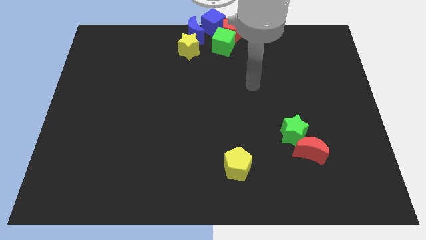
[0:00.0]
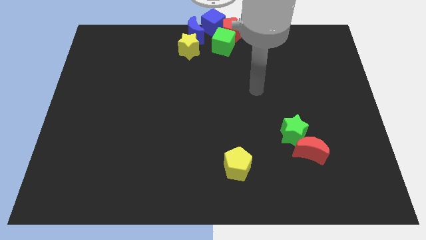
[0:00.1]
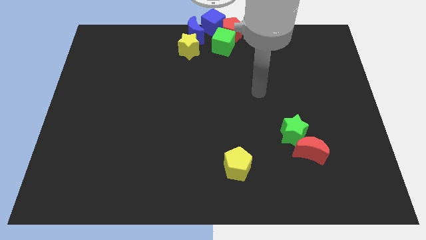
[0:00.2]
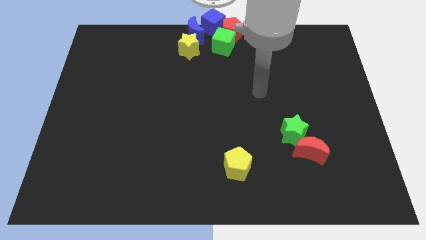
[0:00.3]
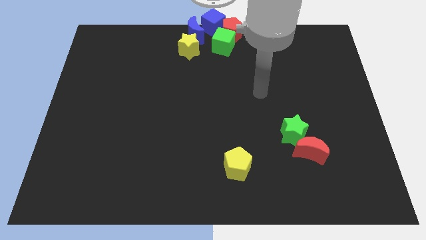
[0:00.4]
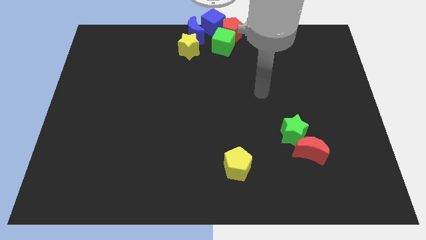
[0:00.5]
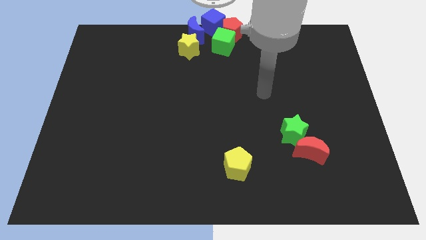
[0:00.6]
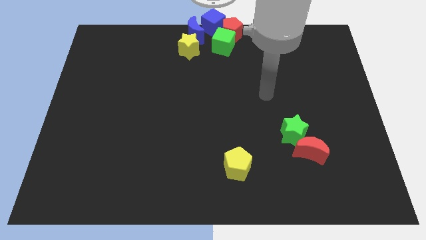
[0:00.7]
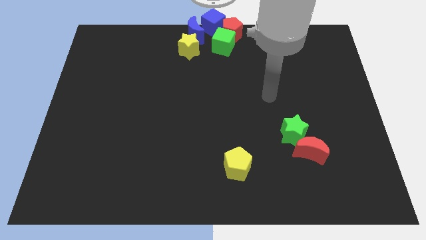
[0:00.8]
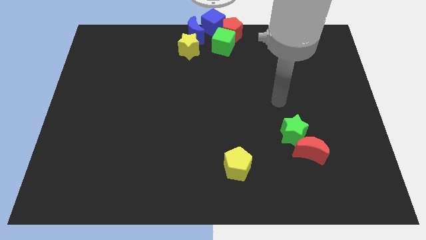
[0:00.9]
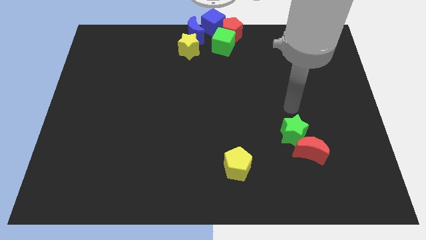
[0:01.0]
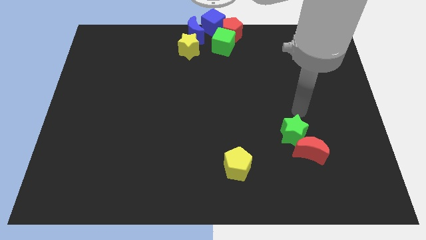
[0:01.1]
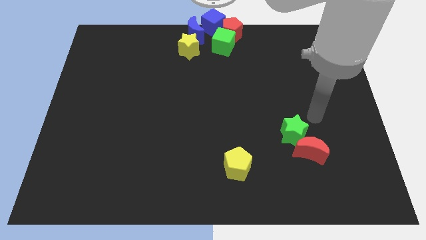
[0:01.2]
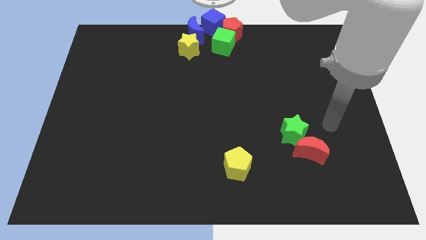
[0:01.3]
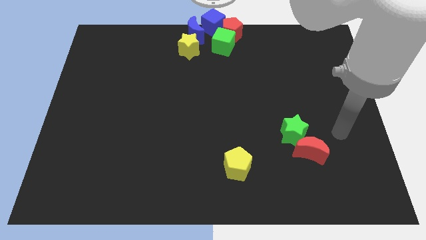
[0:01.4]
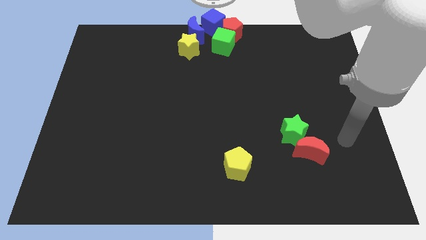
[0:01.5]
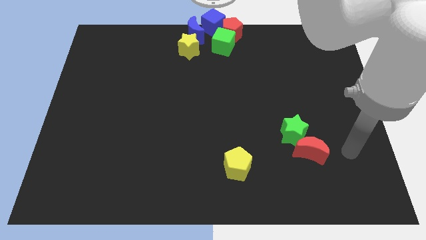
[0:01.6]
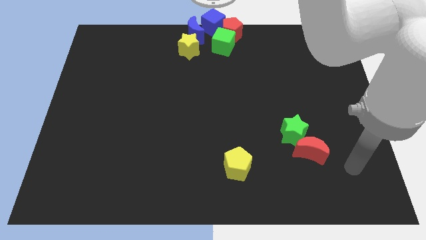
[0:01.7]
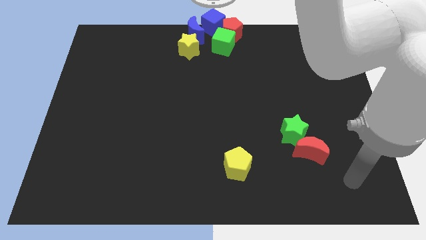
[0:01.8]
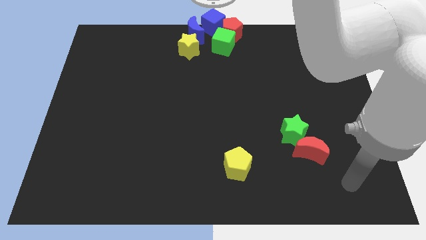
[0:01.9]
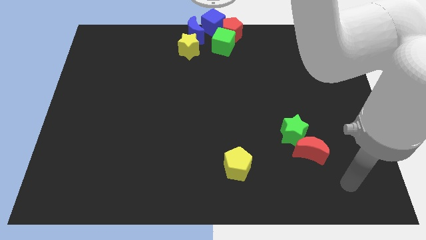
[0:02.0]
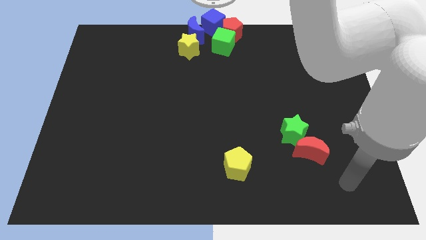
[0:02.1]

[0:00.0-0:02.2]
move your arm towards the bottom right side of the board

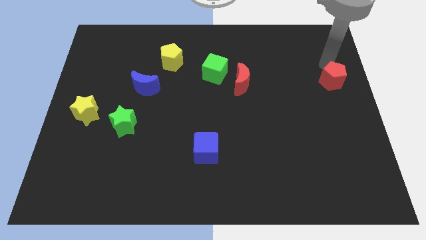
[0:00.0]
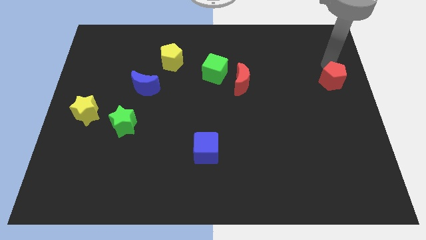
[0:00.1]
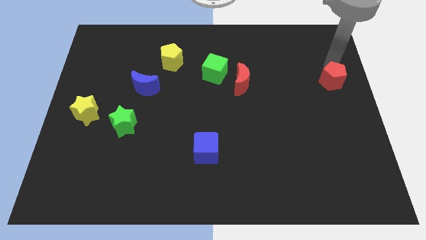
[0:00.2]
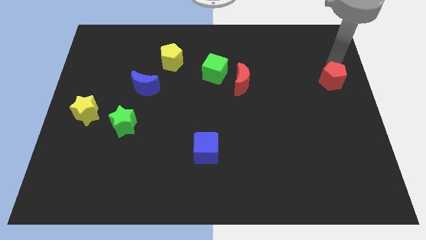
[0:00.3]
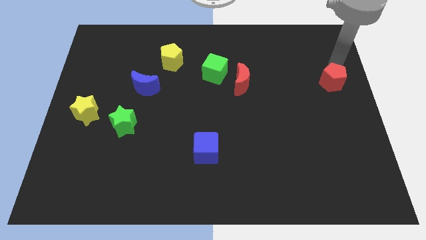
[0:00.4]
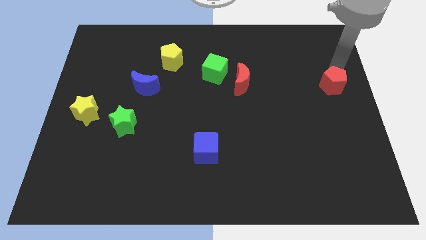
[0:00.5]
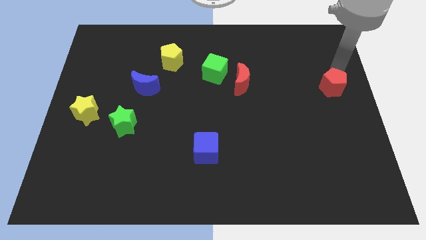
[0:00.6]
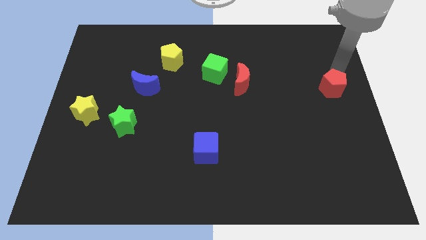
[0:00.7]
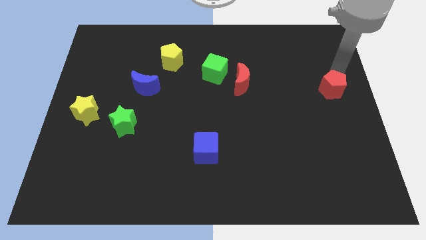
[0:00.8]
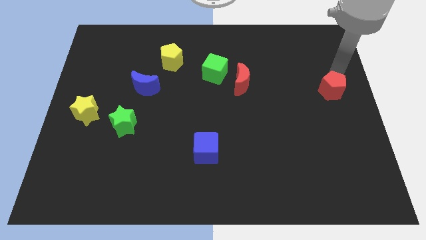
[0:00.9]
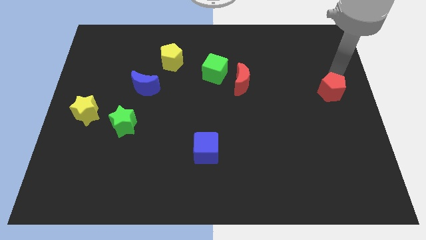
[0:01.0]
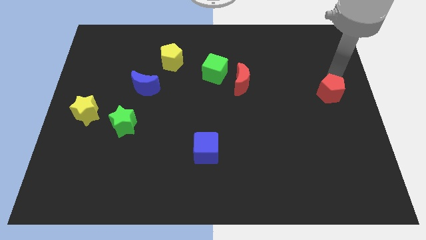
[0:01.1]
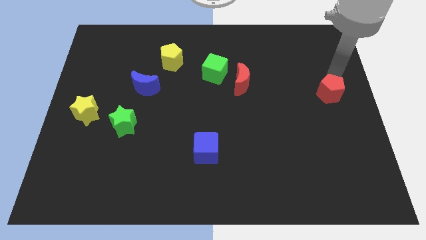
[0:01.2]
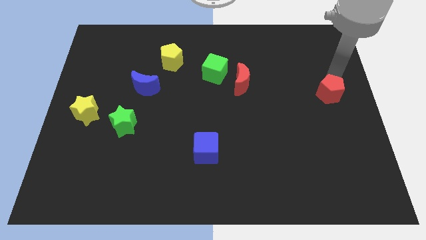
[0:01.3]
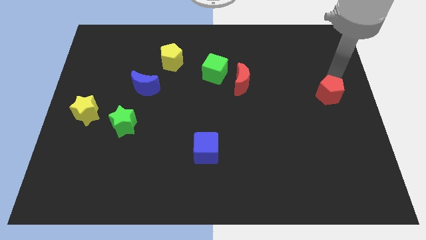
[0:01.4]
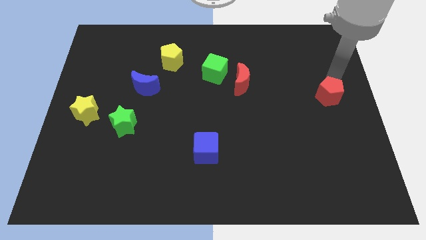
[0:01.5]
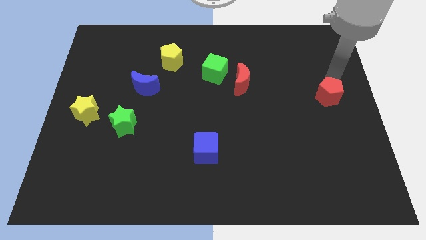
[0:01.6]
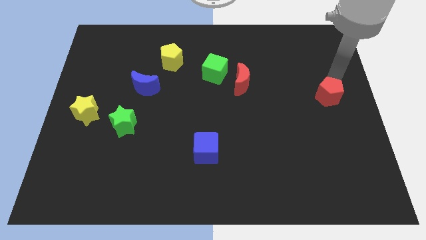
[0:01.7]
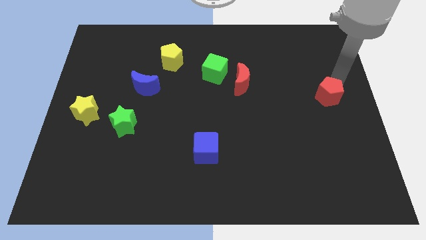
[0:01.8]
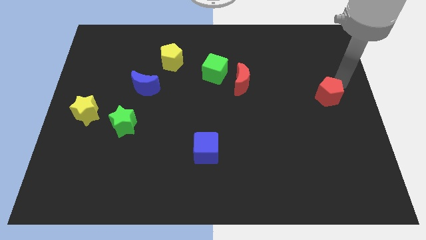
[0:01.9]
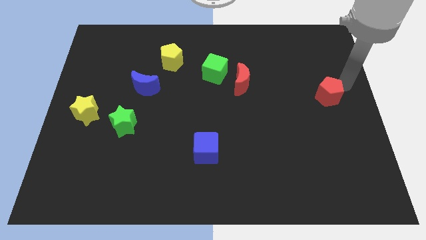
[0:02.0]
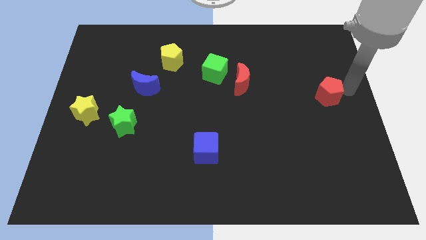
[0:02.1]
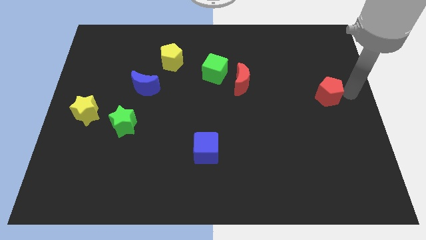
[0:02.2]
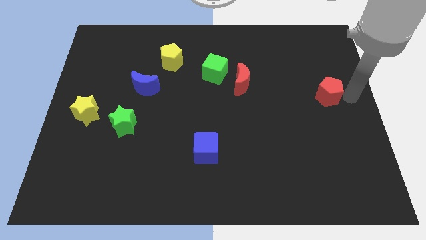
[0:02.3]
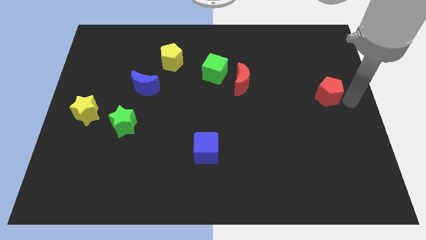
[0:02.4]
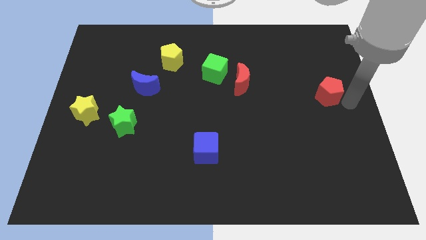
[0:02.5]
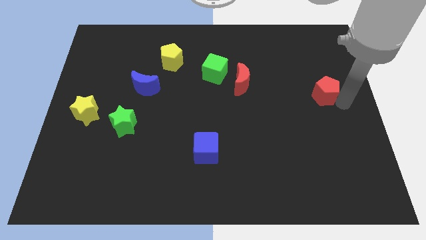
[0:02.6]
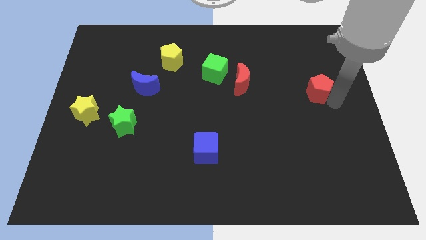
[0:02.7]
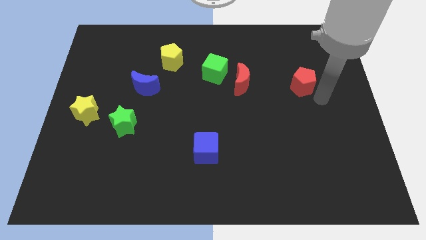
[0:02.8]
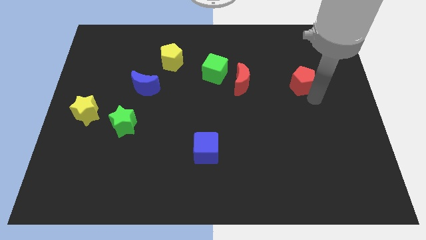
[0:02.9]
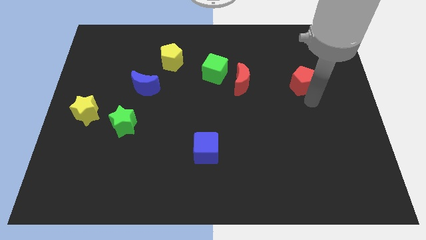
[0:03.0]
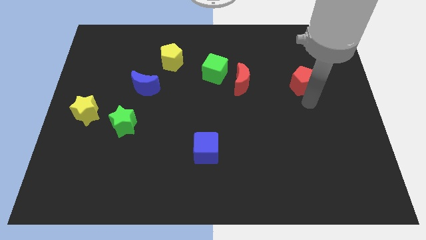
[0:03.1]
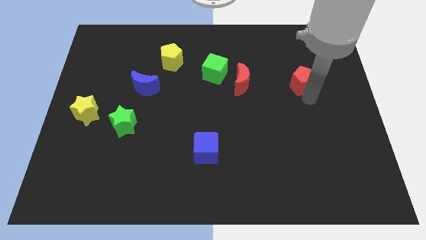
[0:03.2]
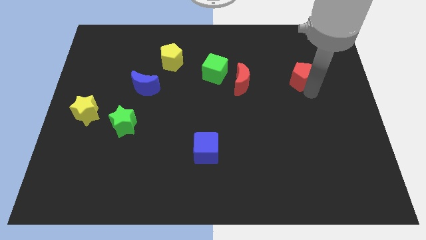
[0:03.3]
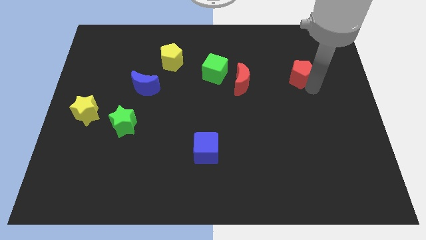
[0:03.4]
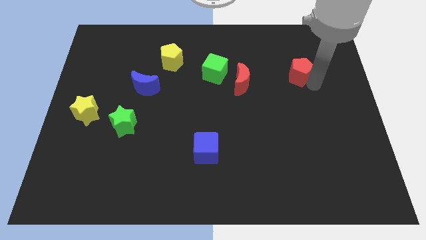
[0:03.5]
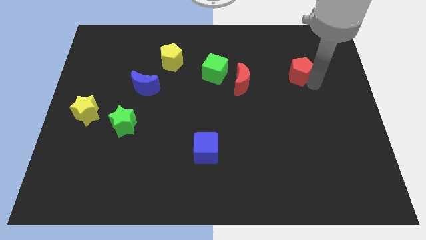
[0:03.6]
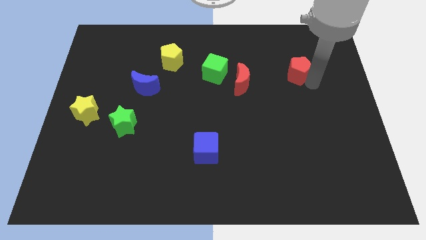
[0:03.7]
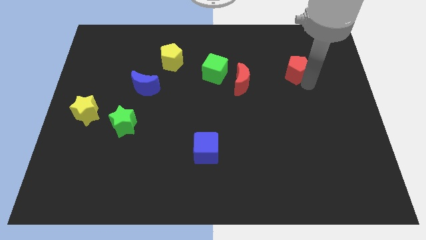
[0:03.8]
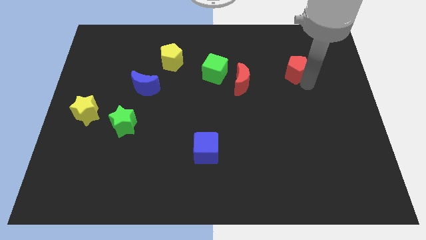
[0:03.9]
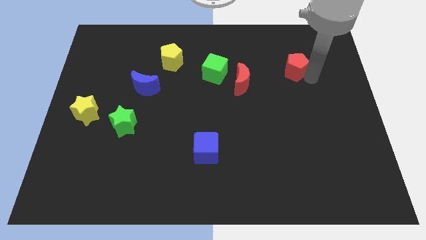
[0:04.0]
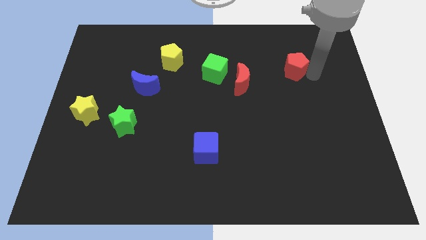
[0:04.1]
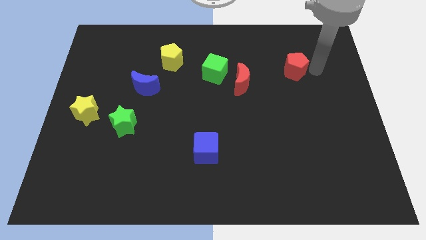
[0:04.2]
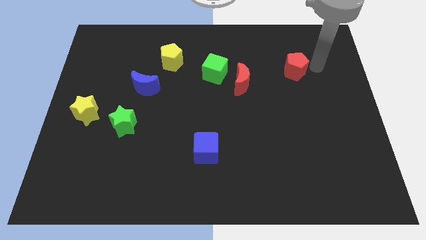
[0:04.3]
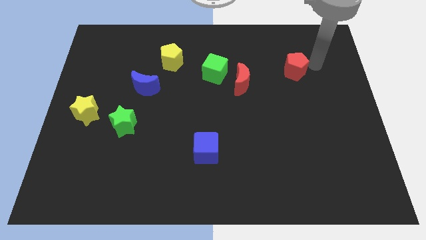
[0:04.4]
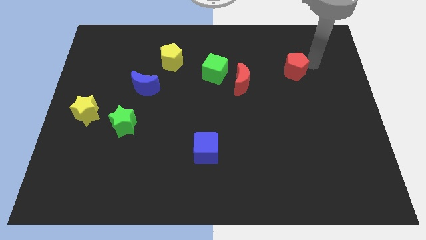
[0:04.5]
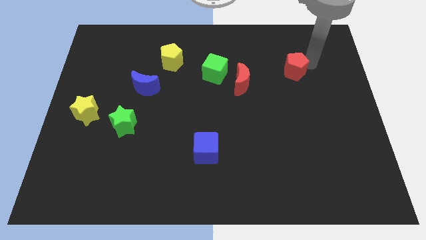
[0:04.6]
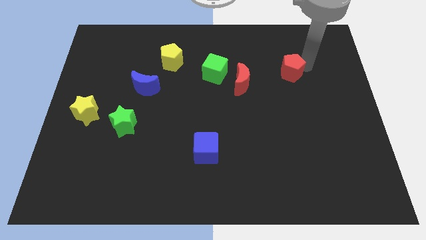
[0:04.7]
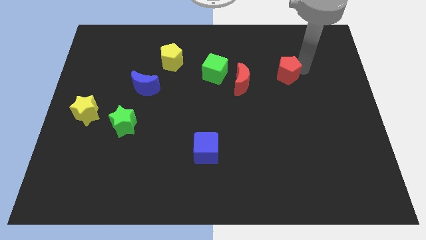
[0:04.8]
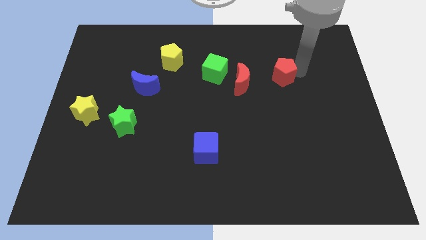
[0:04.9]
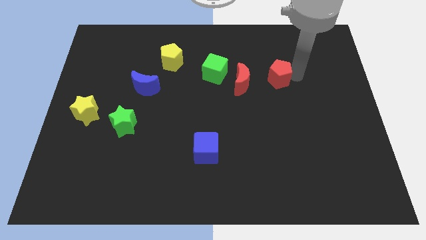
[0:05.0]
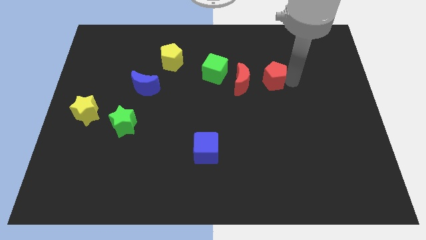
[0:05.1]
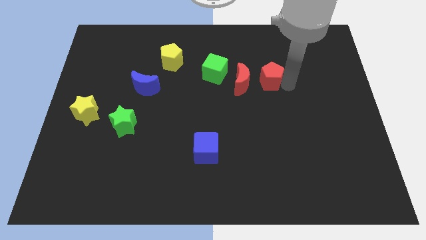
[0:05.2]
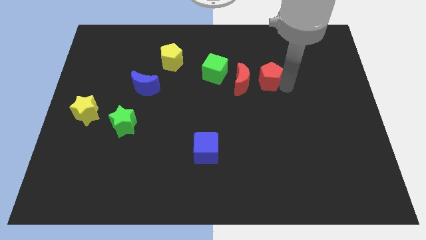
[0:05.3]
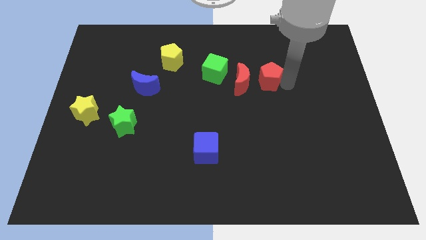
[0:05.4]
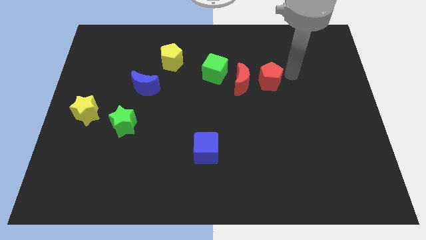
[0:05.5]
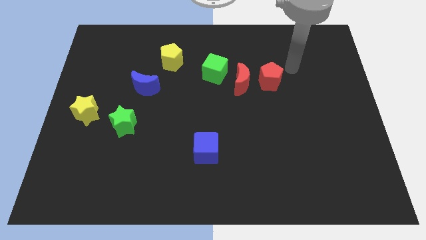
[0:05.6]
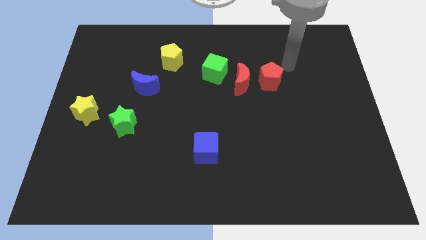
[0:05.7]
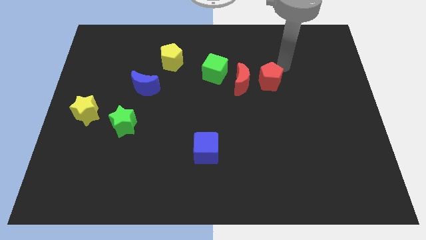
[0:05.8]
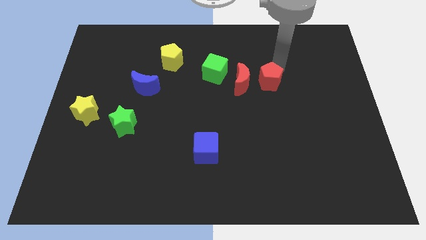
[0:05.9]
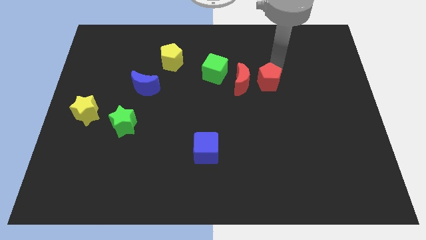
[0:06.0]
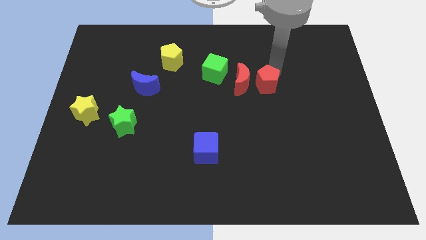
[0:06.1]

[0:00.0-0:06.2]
move red pentagon to the right of red moon

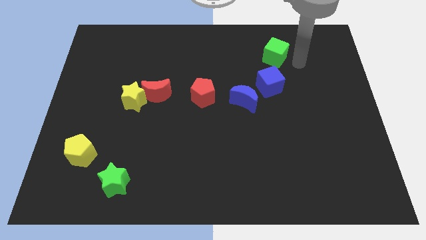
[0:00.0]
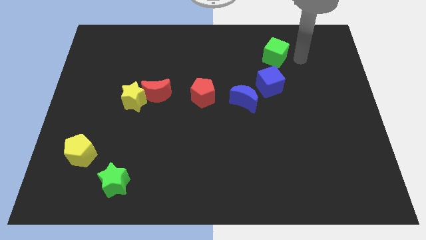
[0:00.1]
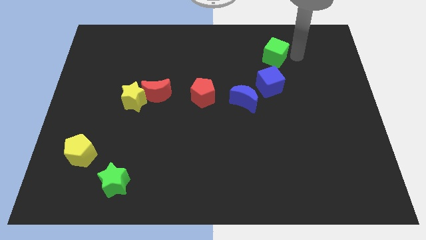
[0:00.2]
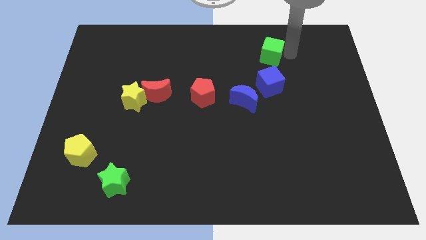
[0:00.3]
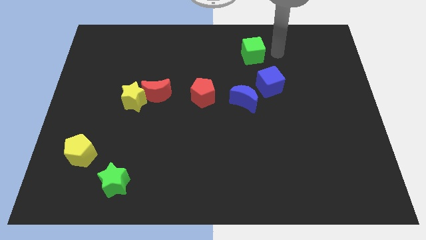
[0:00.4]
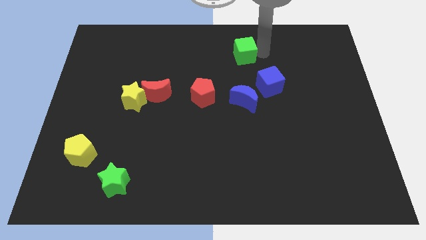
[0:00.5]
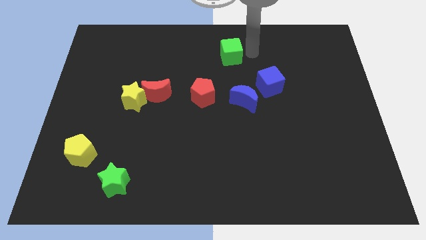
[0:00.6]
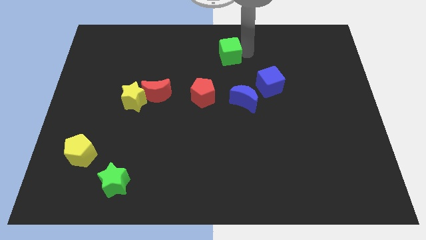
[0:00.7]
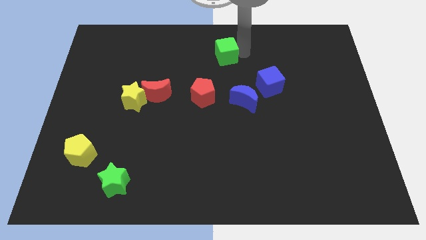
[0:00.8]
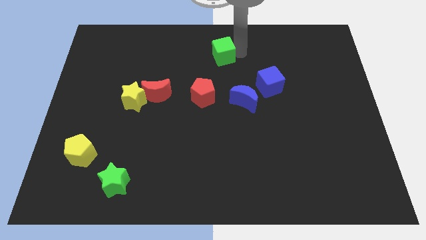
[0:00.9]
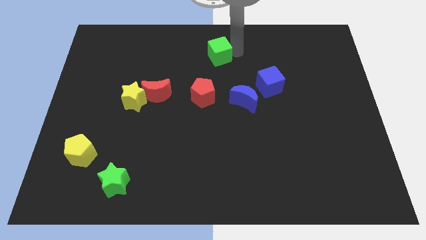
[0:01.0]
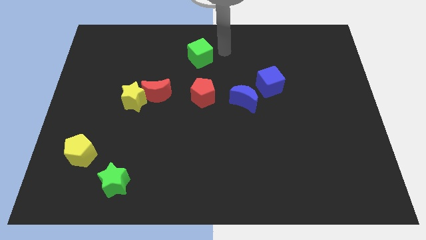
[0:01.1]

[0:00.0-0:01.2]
move the green cube to the top middle of the board
